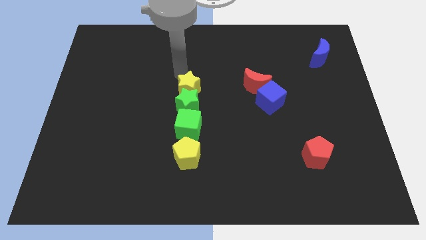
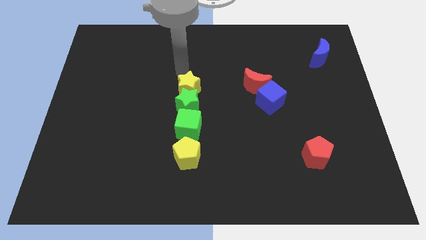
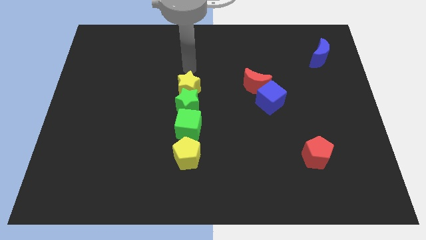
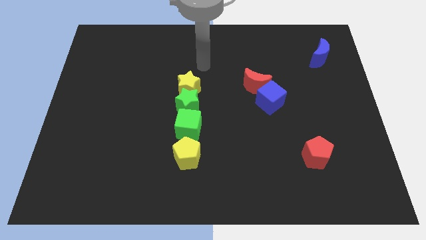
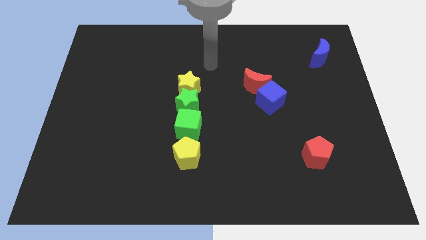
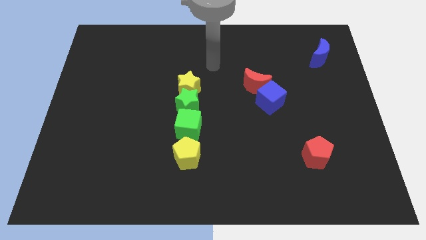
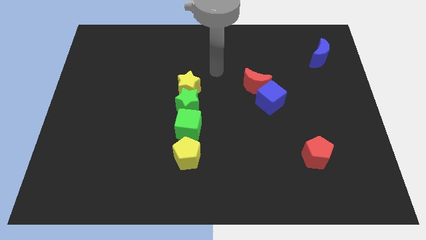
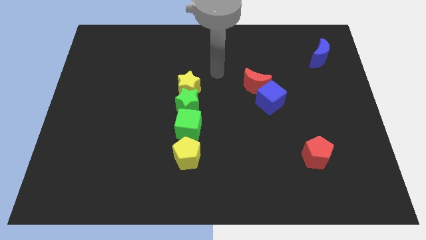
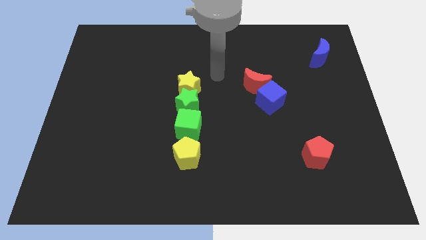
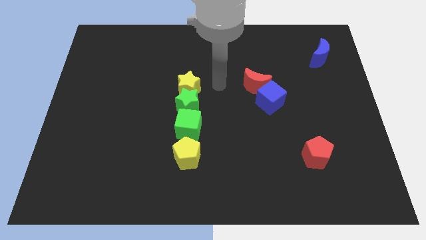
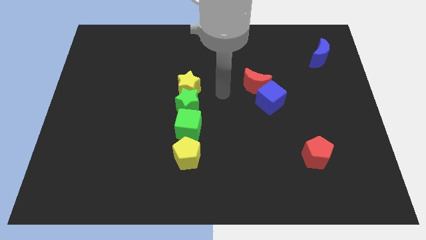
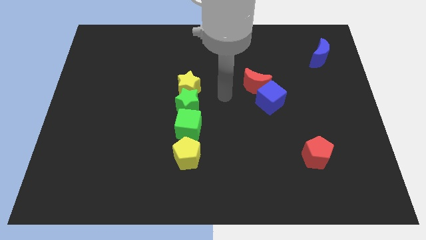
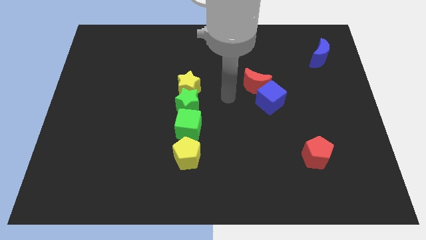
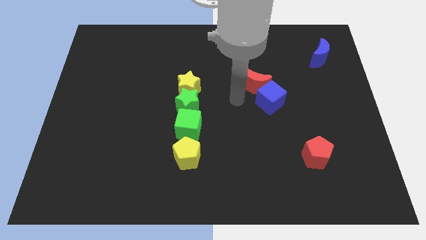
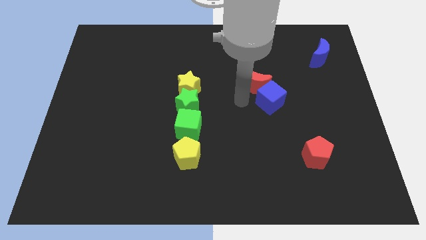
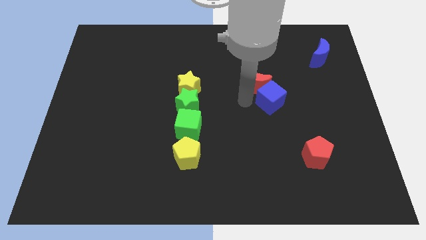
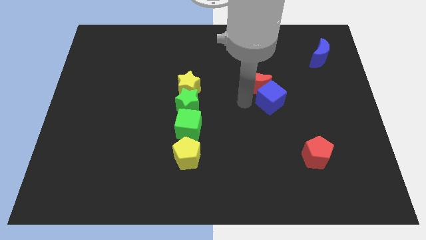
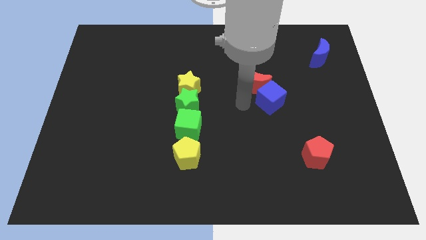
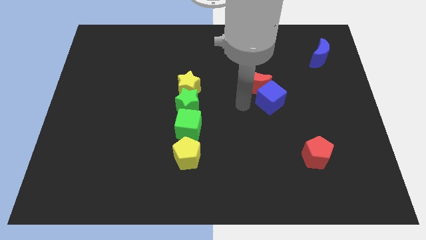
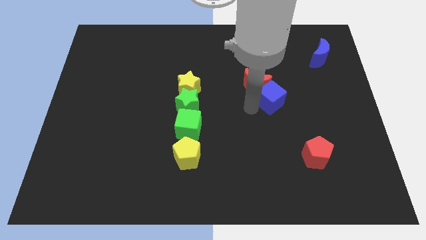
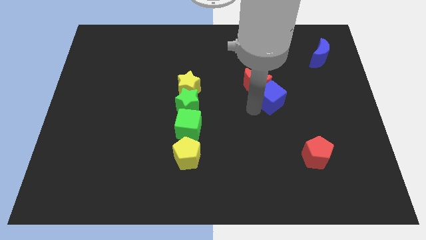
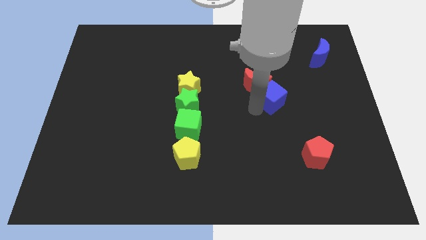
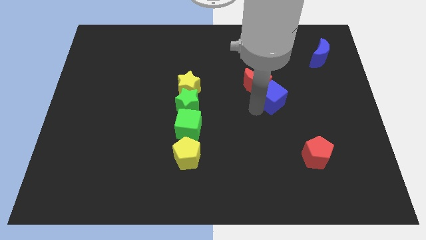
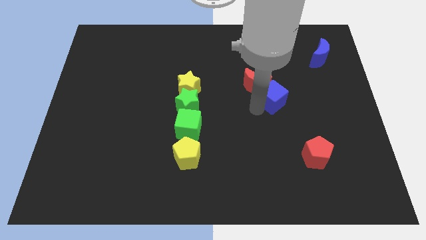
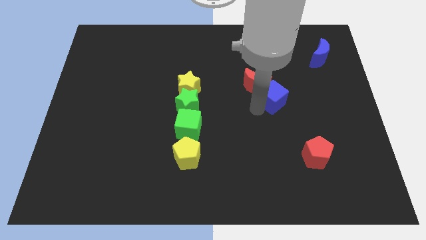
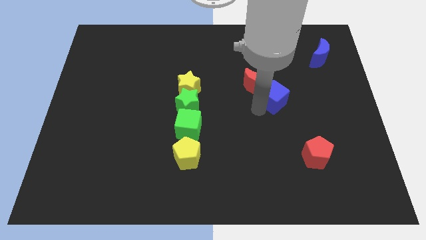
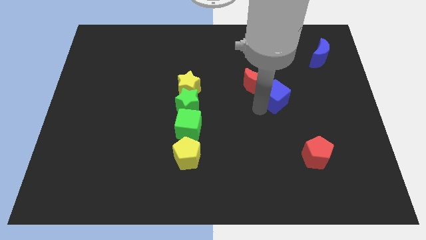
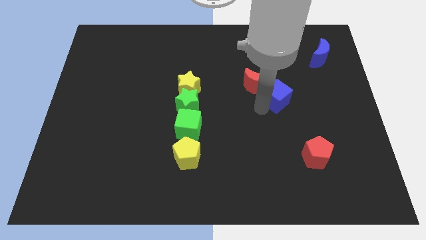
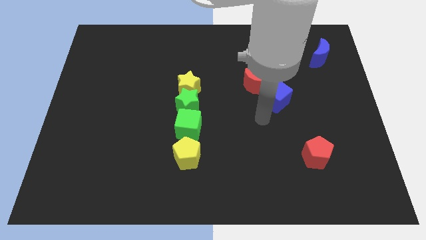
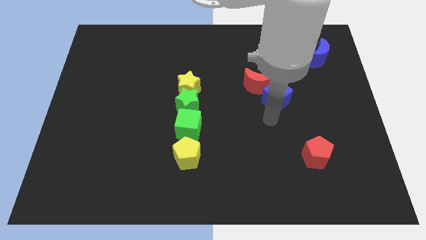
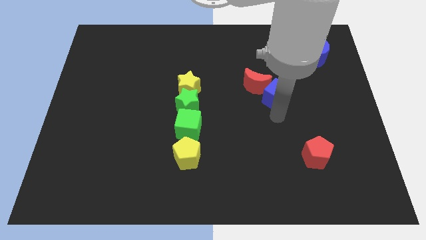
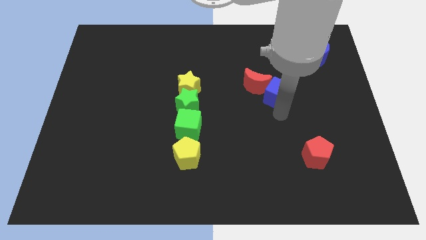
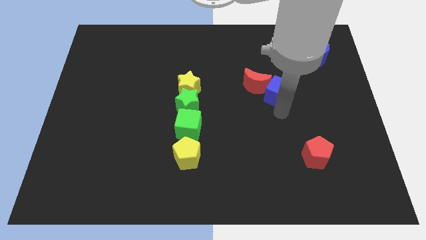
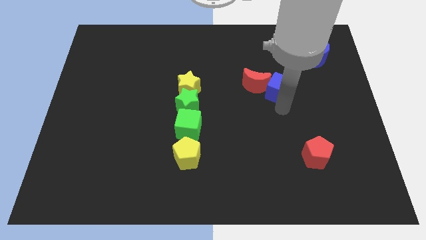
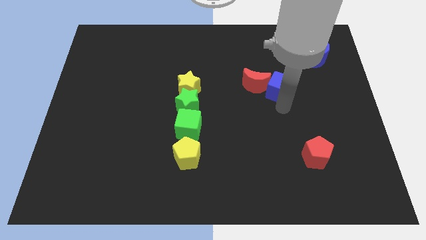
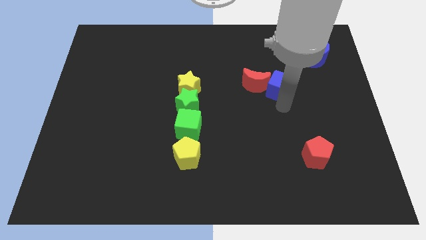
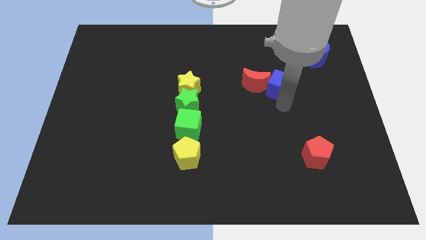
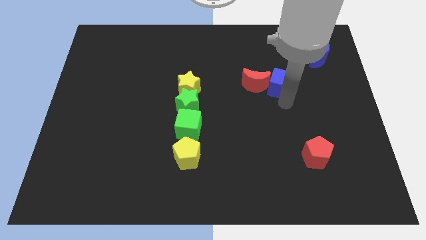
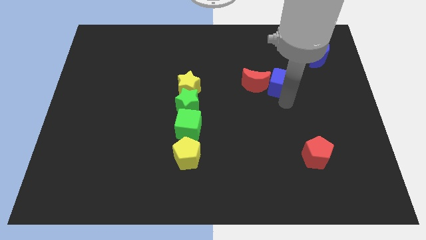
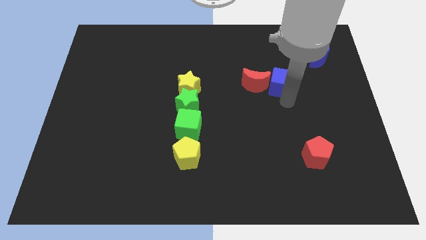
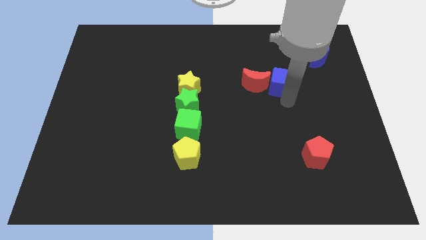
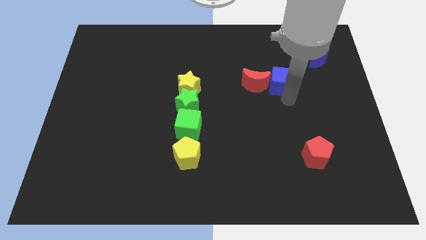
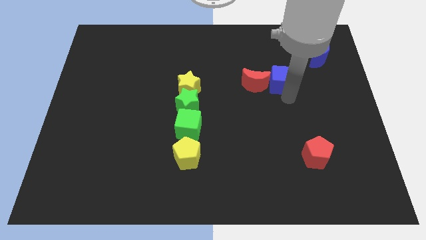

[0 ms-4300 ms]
move the blue cube to the right side of the red crescent

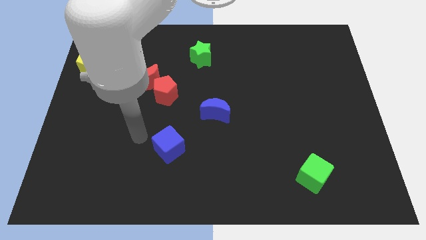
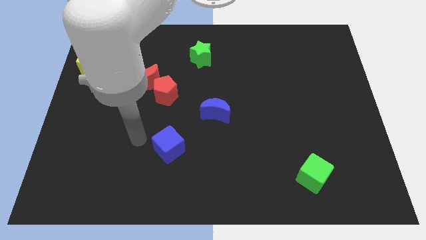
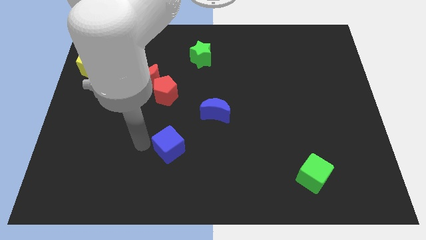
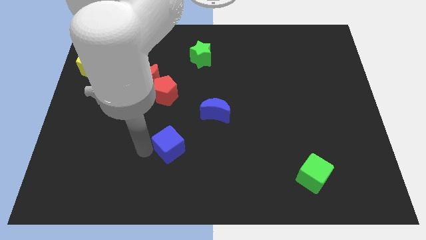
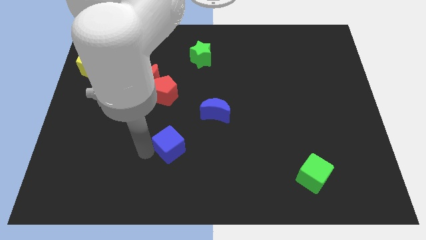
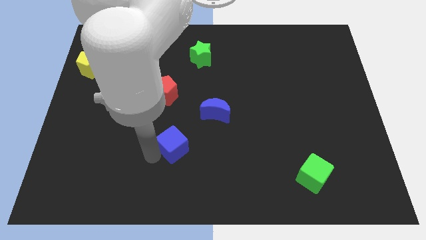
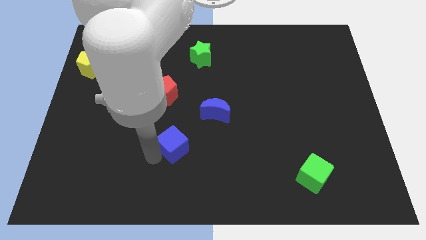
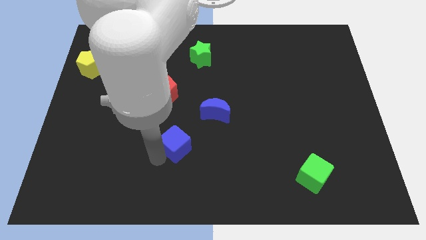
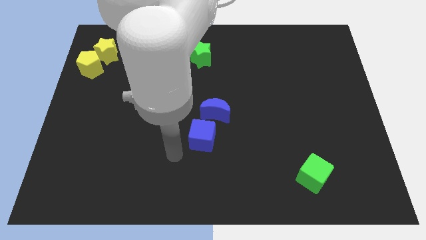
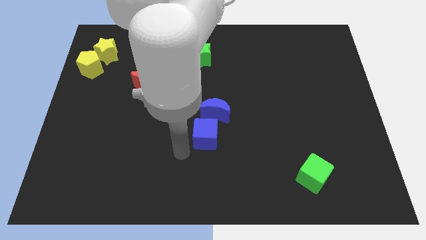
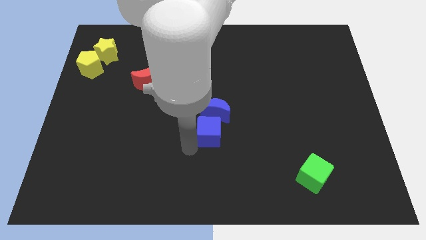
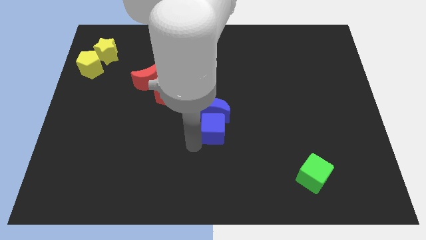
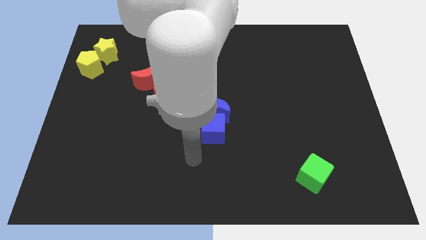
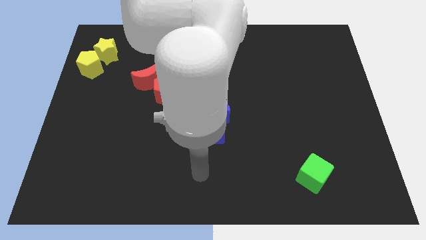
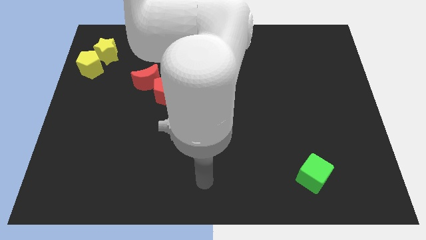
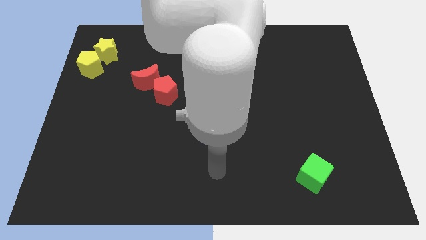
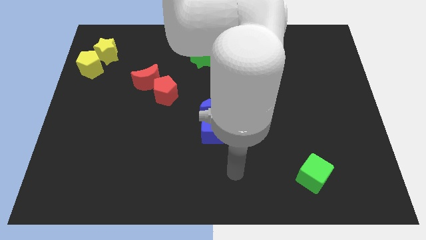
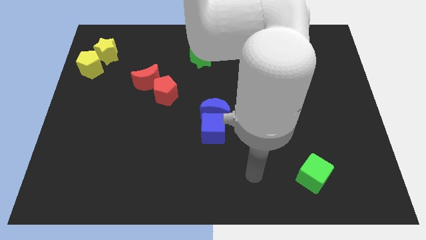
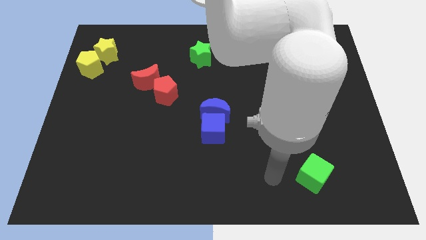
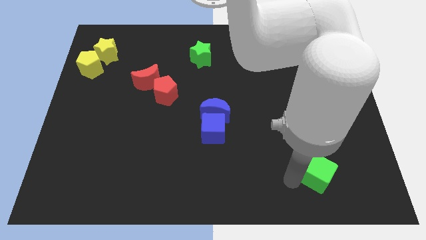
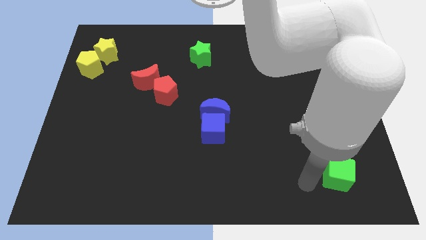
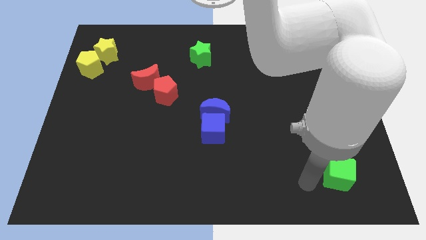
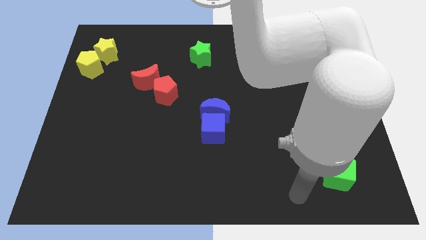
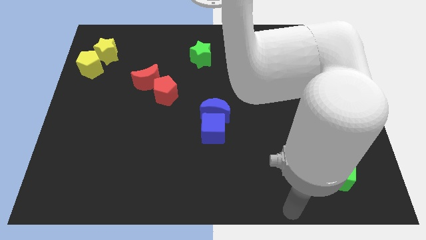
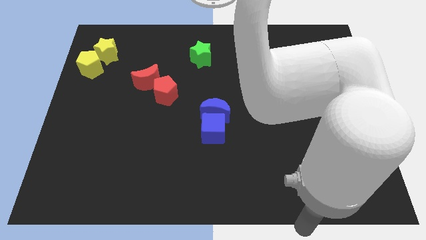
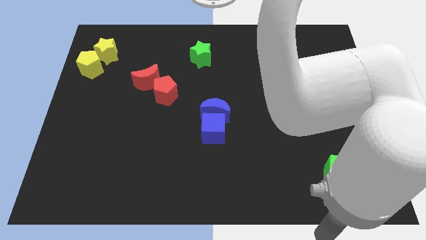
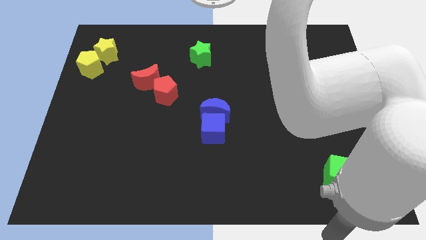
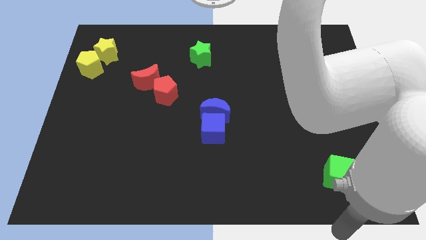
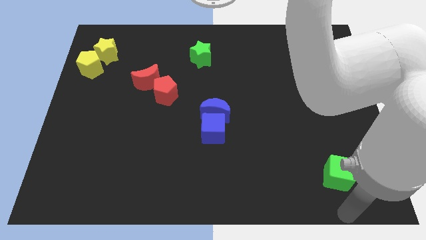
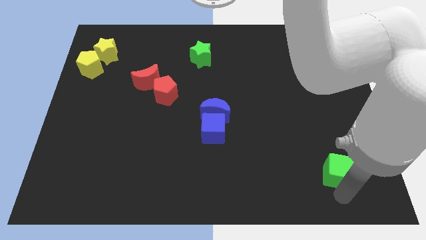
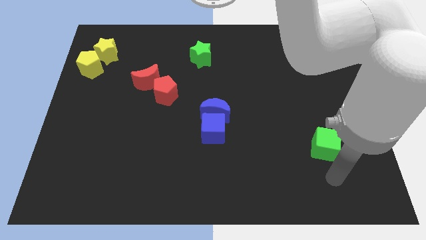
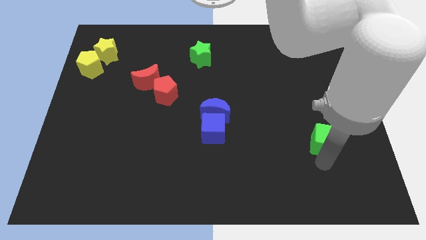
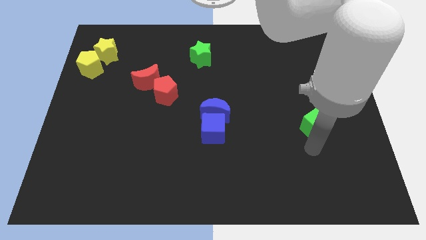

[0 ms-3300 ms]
move the green cube to the right of the blue cube

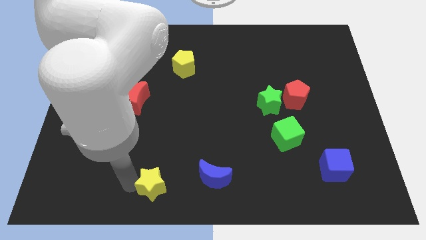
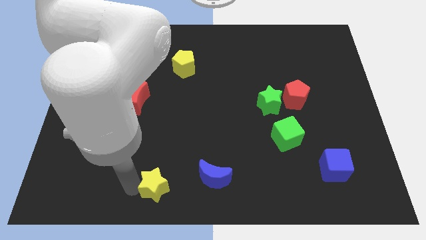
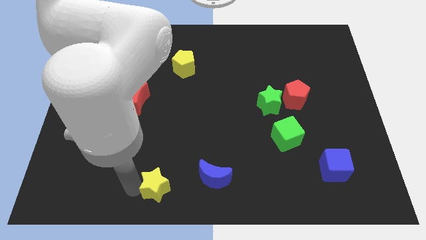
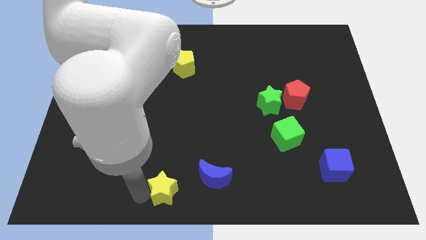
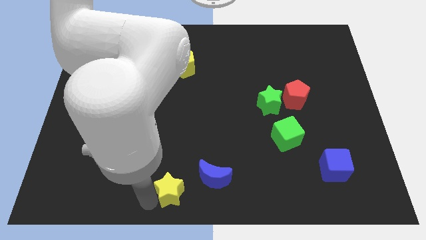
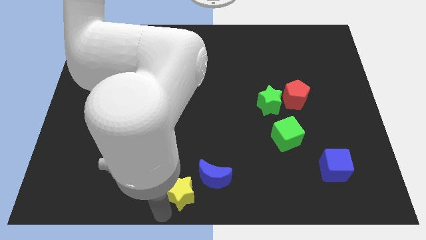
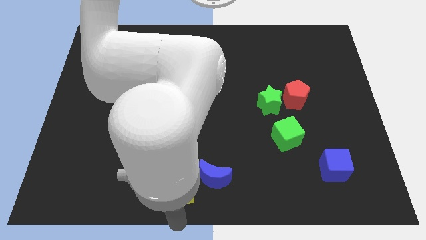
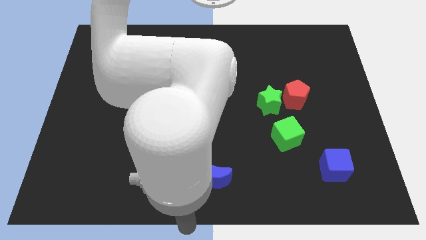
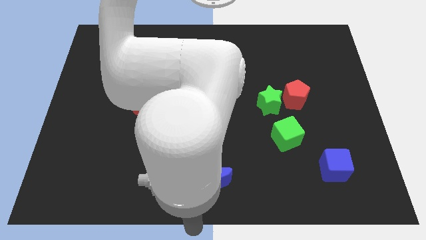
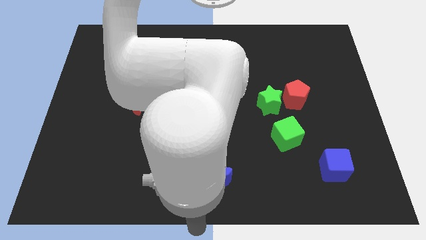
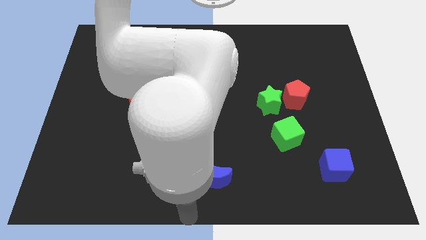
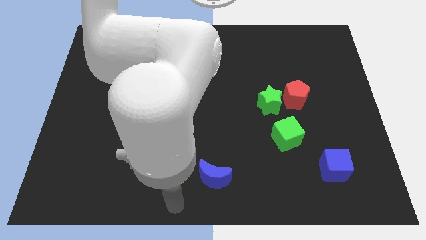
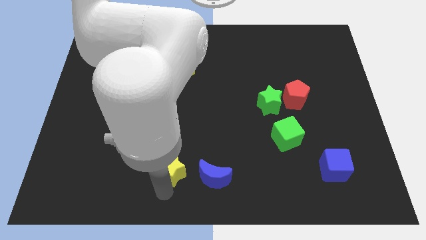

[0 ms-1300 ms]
move the yellow star left to the blue moon
